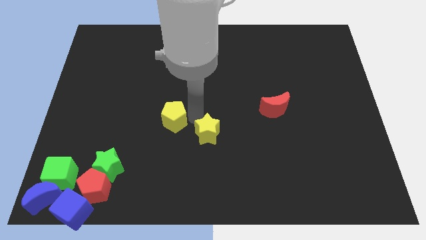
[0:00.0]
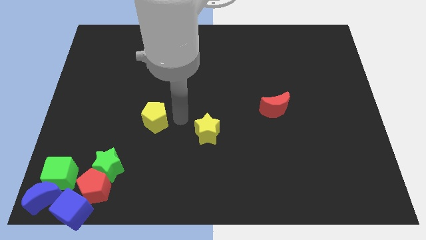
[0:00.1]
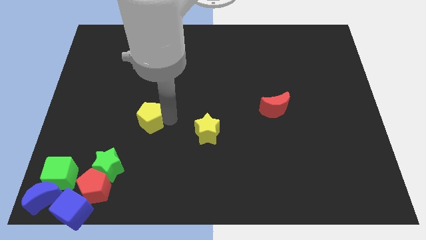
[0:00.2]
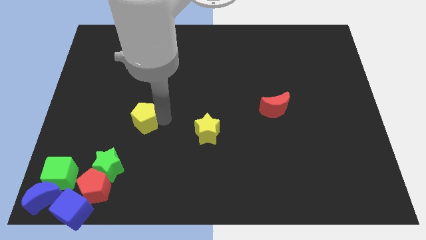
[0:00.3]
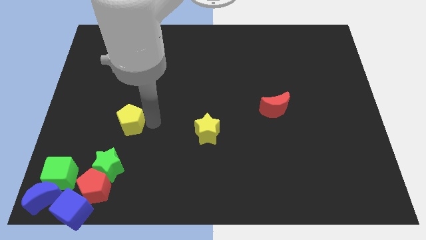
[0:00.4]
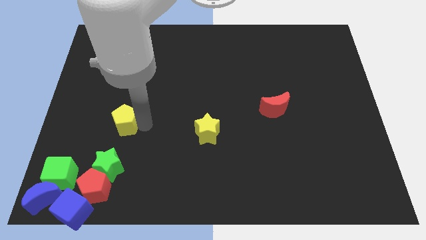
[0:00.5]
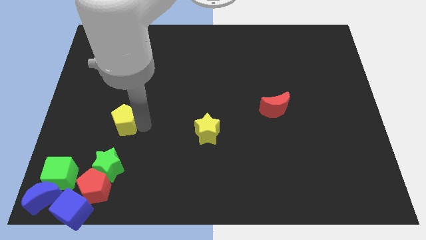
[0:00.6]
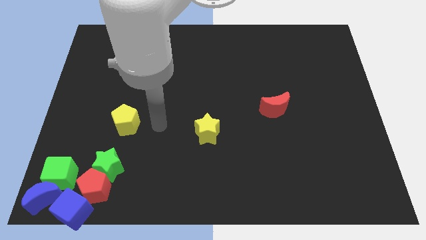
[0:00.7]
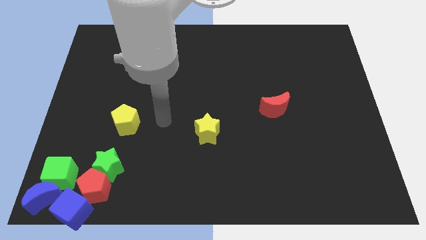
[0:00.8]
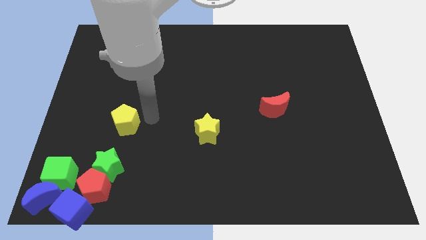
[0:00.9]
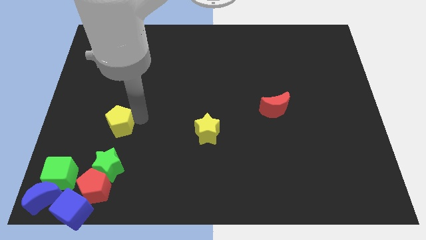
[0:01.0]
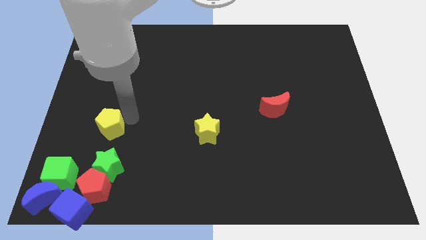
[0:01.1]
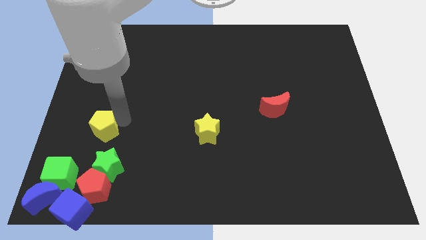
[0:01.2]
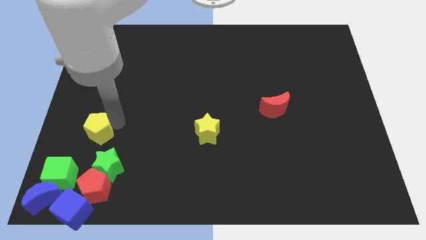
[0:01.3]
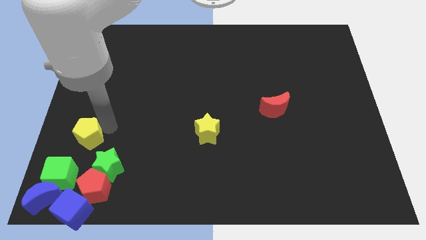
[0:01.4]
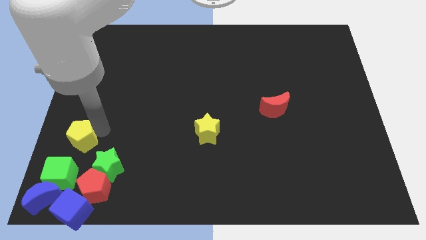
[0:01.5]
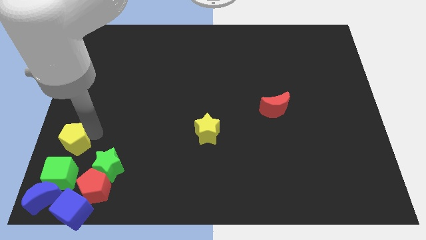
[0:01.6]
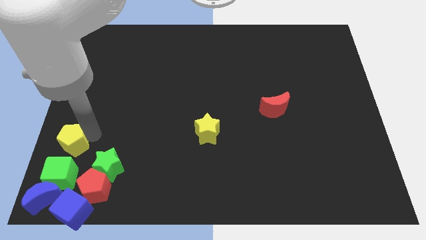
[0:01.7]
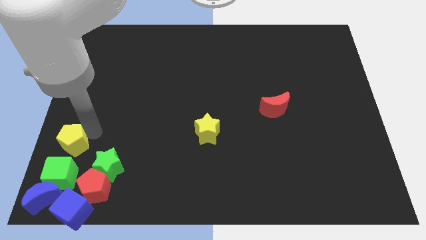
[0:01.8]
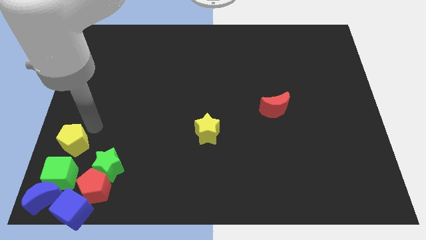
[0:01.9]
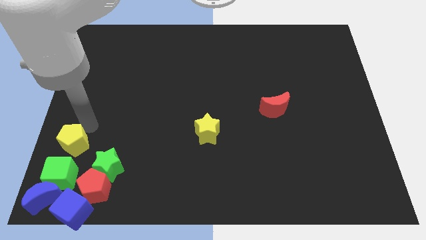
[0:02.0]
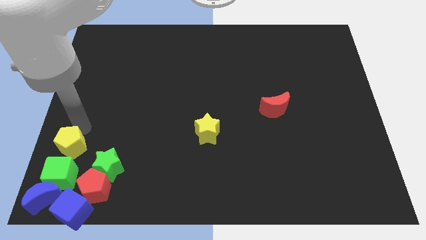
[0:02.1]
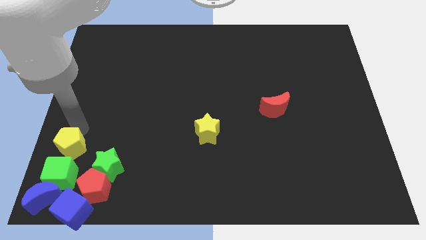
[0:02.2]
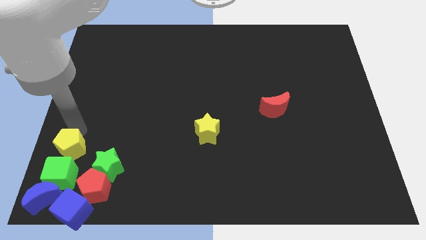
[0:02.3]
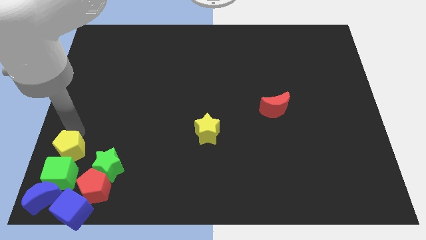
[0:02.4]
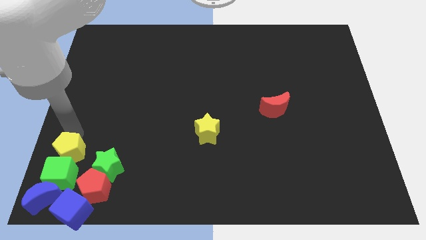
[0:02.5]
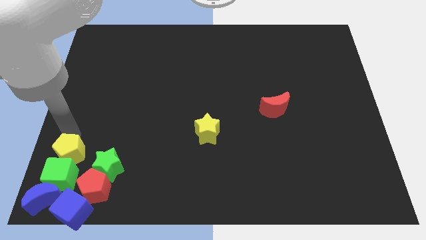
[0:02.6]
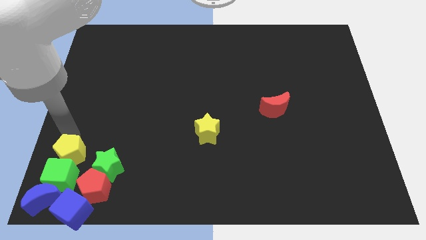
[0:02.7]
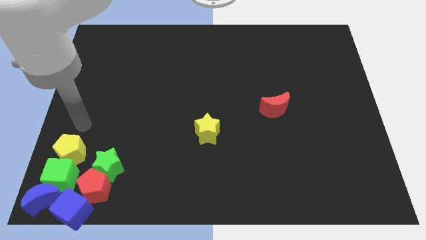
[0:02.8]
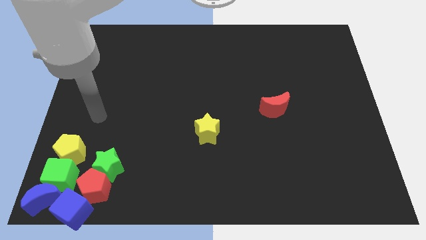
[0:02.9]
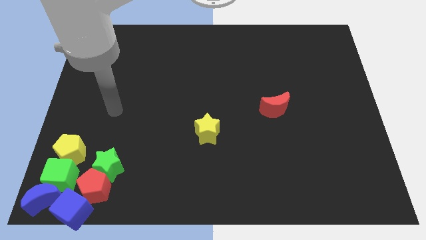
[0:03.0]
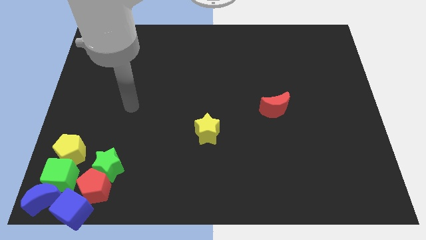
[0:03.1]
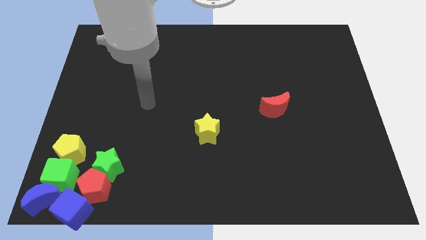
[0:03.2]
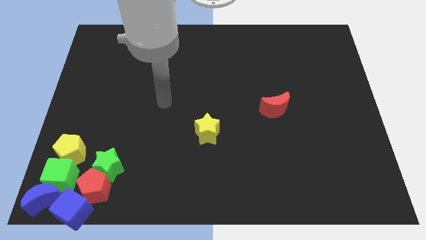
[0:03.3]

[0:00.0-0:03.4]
push the yellow pentagon into the green cube

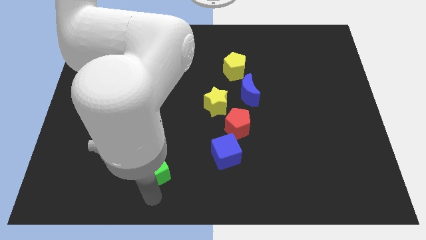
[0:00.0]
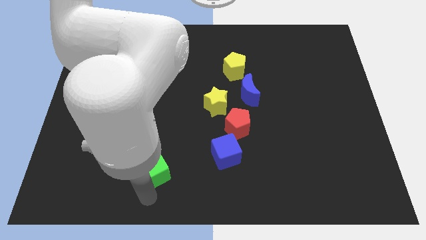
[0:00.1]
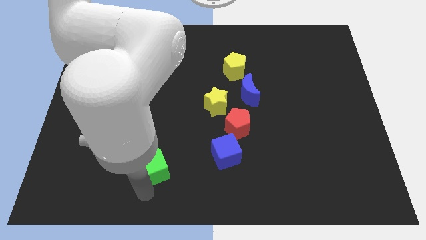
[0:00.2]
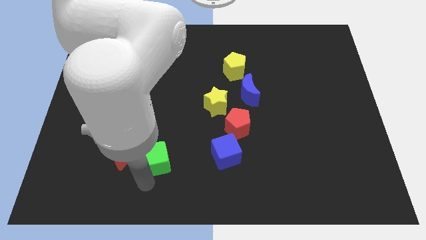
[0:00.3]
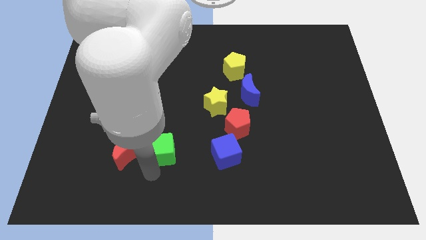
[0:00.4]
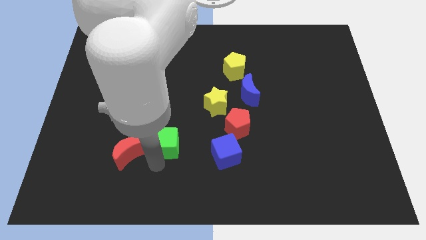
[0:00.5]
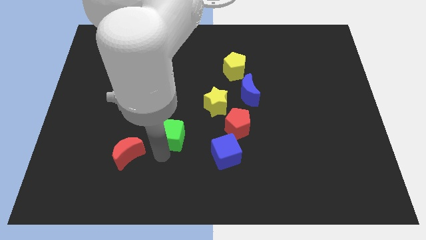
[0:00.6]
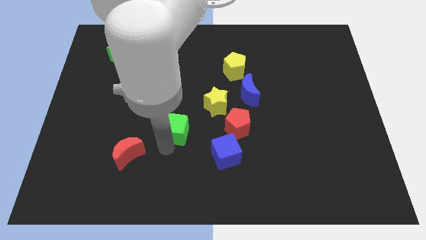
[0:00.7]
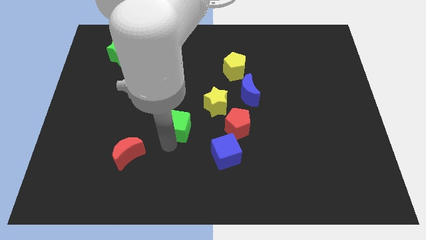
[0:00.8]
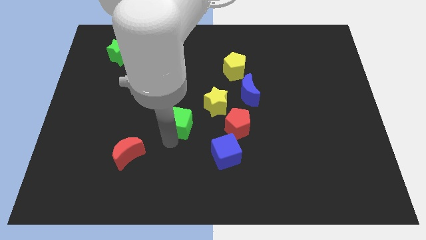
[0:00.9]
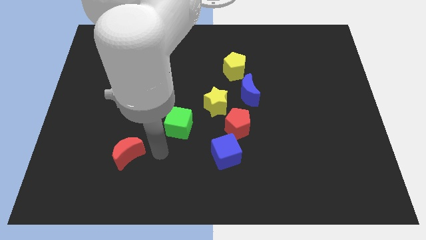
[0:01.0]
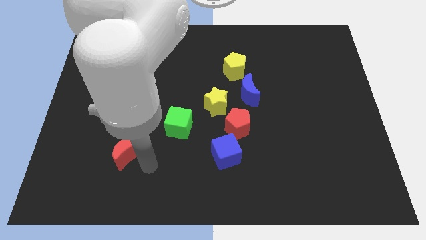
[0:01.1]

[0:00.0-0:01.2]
put the green cube to the left of the red pentagon

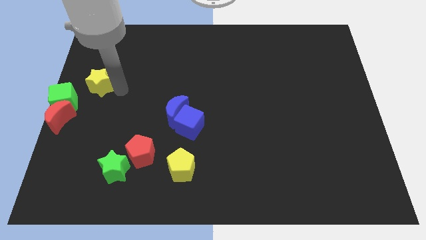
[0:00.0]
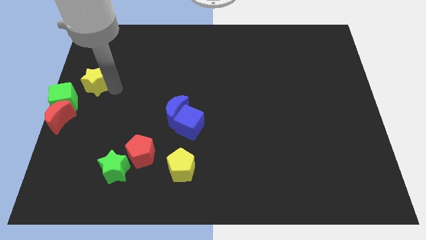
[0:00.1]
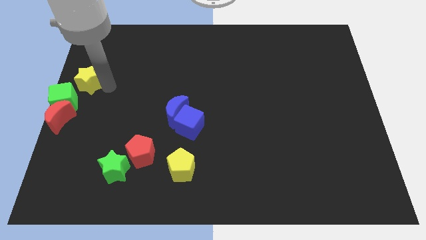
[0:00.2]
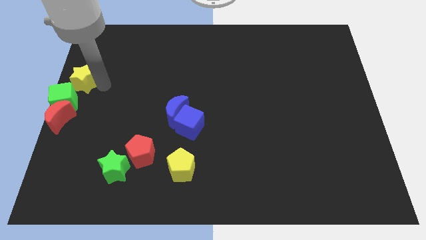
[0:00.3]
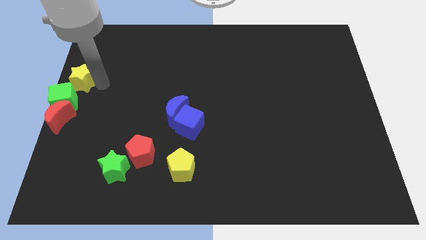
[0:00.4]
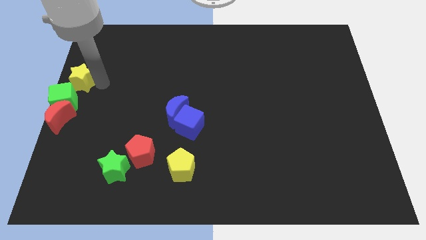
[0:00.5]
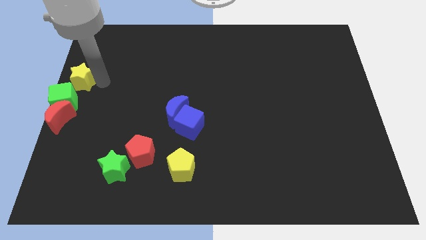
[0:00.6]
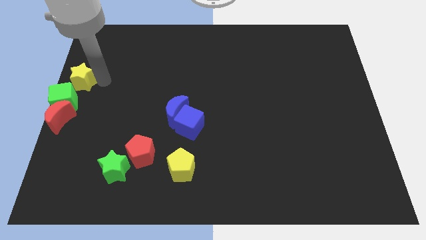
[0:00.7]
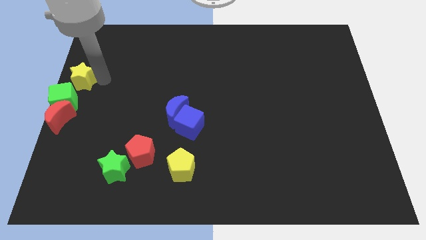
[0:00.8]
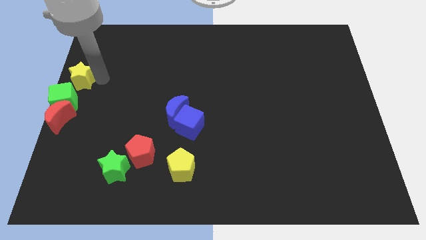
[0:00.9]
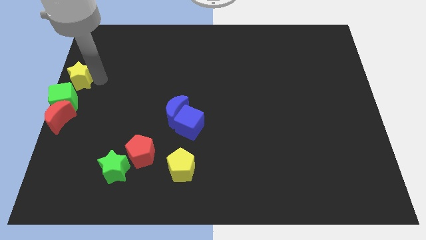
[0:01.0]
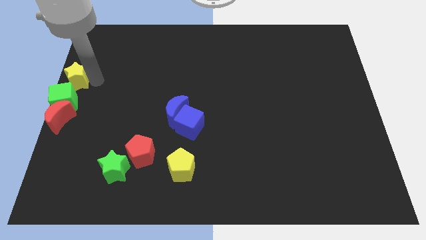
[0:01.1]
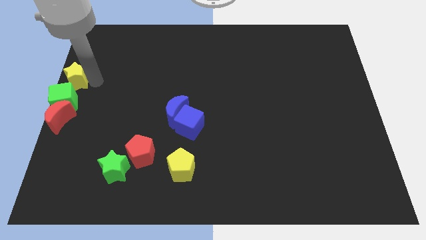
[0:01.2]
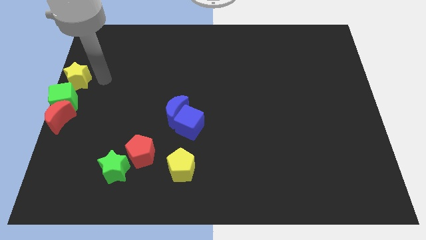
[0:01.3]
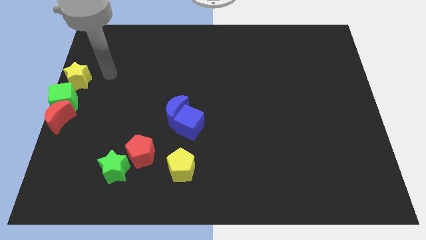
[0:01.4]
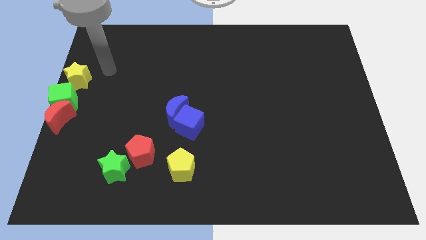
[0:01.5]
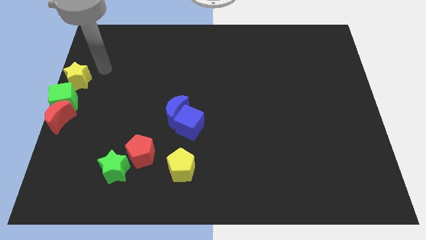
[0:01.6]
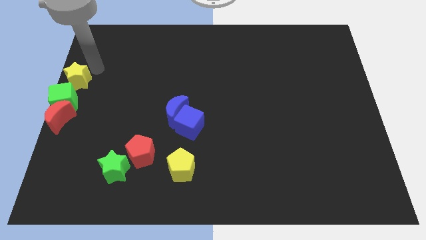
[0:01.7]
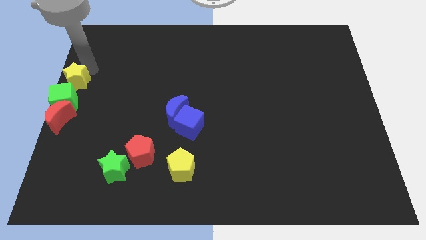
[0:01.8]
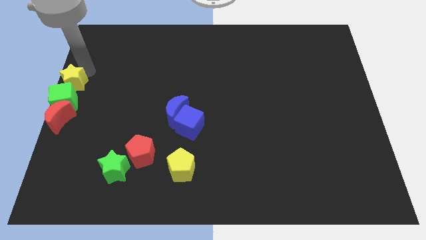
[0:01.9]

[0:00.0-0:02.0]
move the yellow star above the green cube

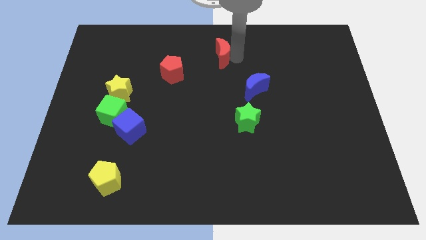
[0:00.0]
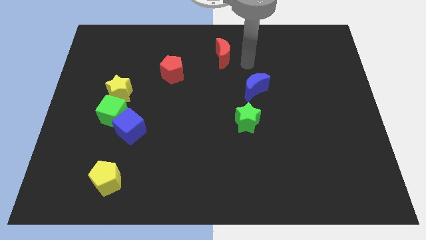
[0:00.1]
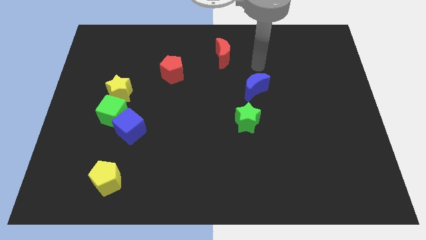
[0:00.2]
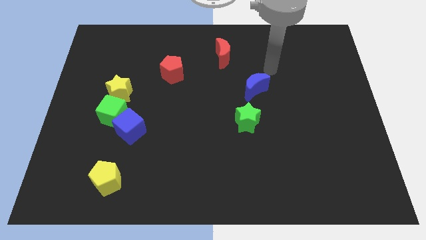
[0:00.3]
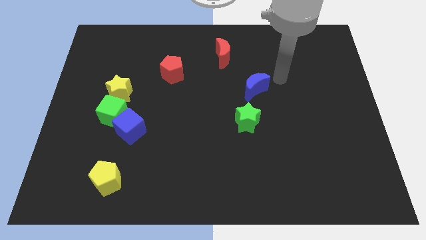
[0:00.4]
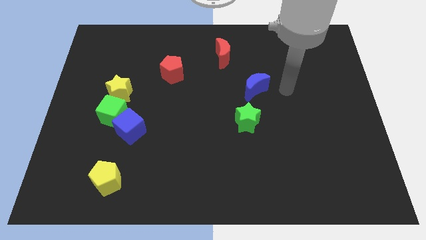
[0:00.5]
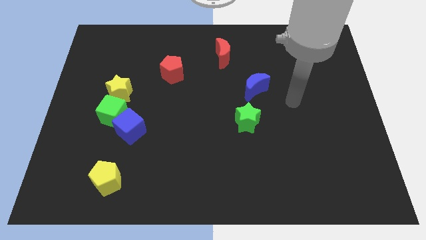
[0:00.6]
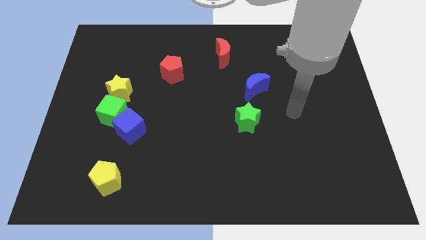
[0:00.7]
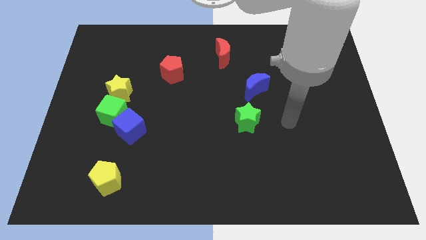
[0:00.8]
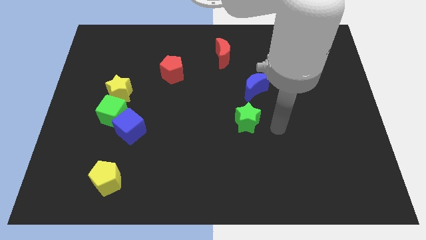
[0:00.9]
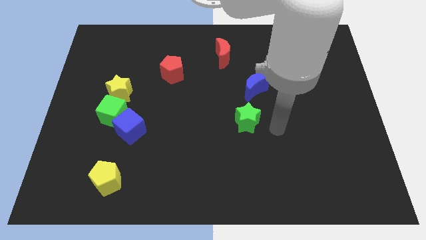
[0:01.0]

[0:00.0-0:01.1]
move your arm to the right of the green star

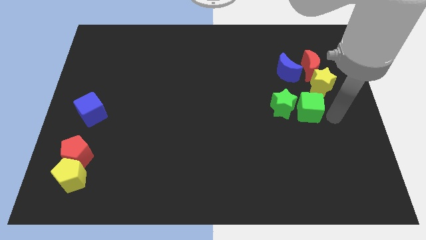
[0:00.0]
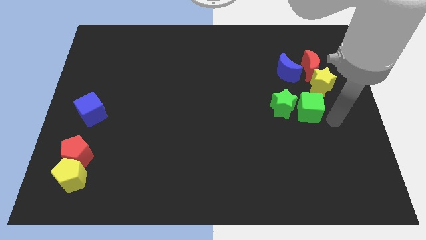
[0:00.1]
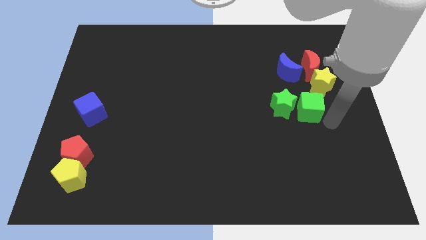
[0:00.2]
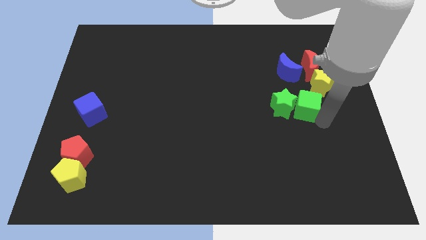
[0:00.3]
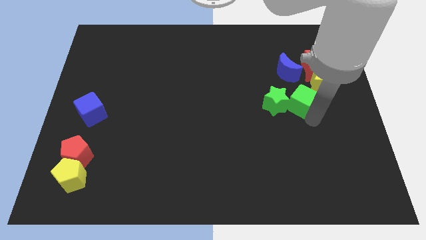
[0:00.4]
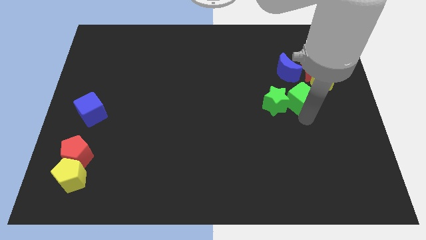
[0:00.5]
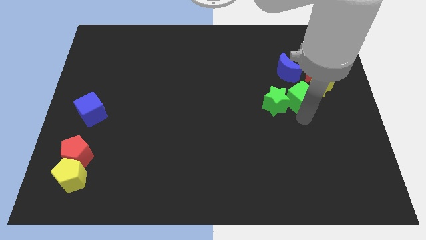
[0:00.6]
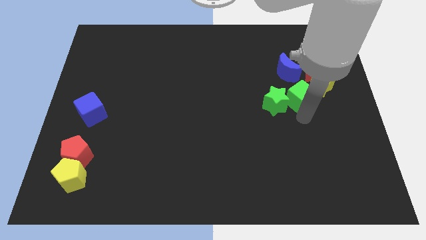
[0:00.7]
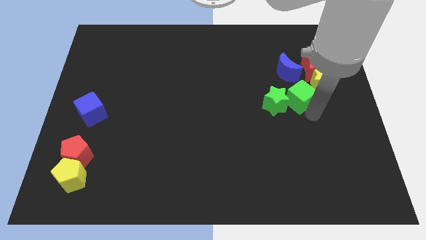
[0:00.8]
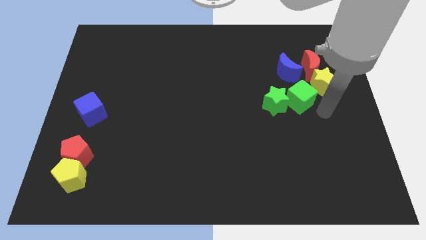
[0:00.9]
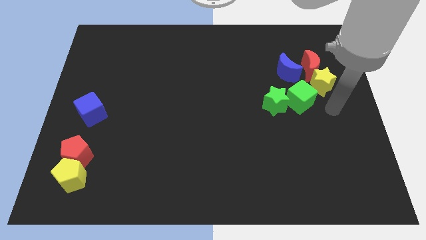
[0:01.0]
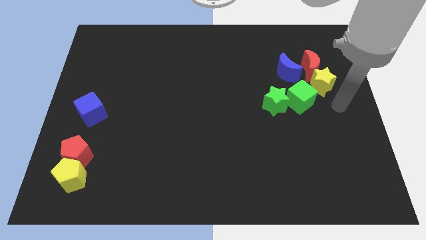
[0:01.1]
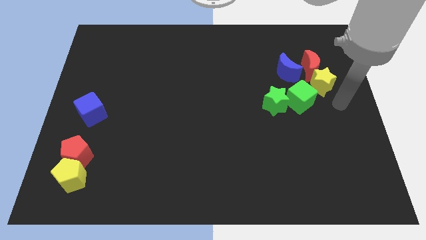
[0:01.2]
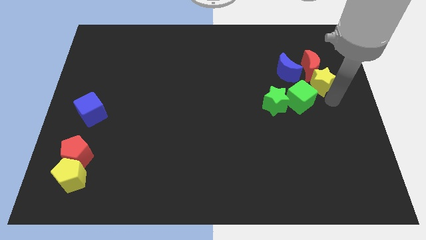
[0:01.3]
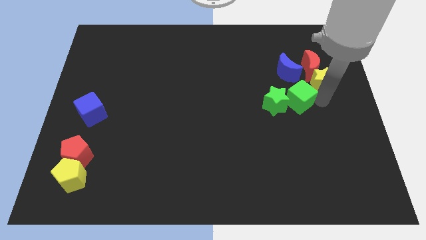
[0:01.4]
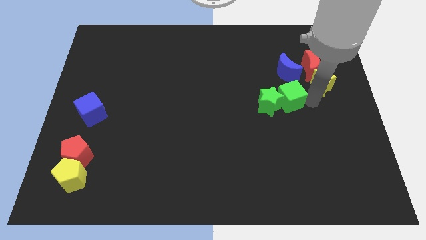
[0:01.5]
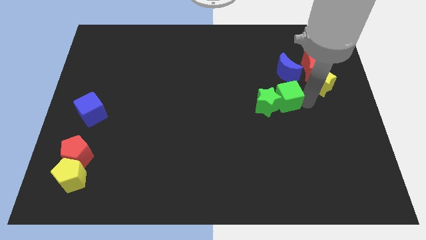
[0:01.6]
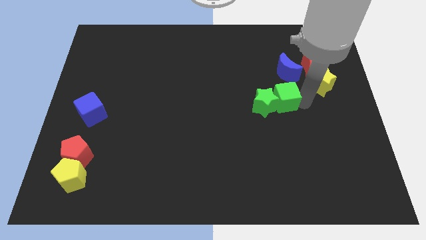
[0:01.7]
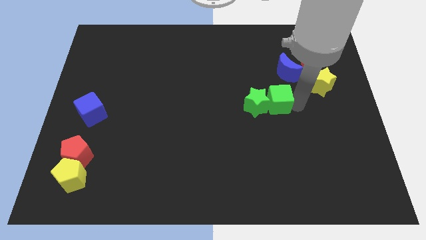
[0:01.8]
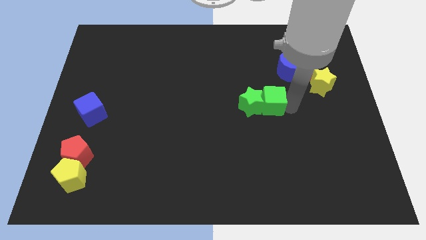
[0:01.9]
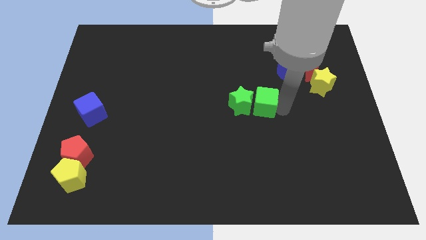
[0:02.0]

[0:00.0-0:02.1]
push the green cube into the green star
